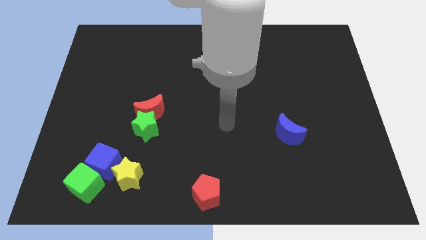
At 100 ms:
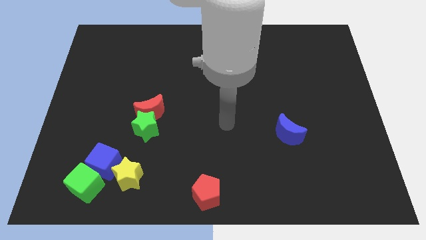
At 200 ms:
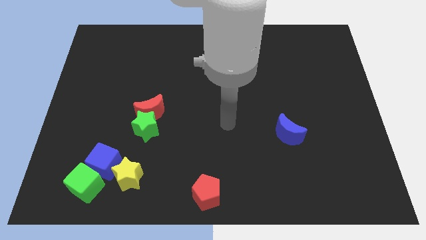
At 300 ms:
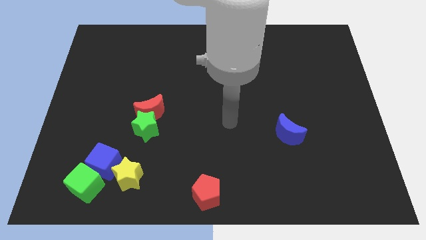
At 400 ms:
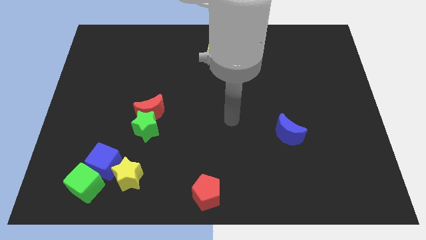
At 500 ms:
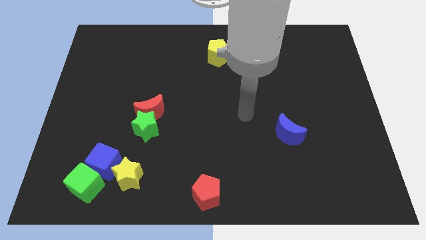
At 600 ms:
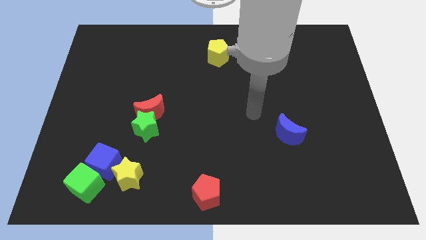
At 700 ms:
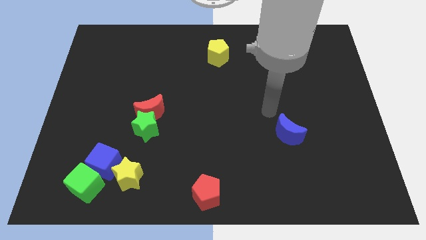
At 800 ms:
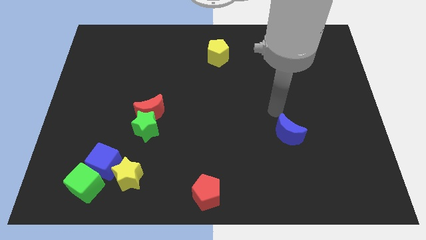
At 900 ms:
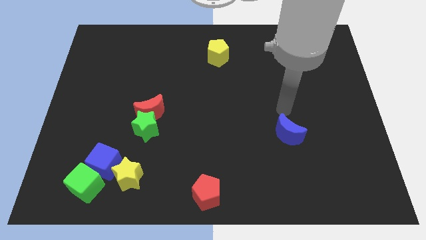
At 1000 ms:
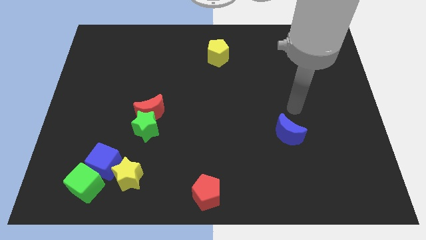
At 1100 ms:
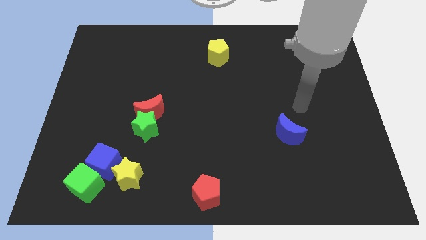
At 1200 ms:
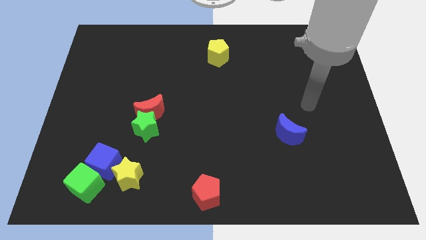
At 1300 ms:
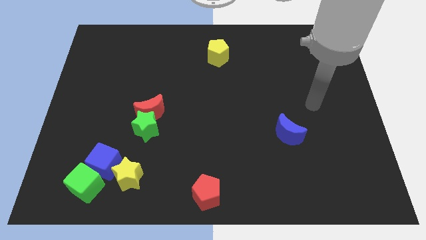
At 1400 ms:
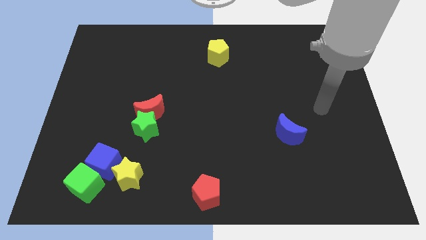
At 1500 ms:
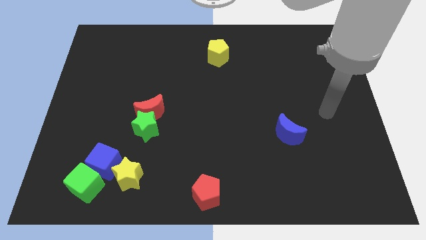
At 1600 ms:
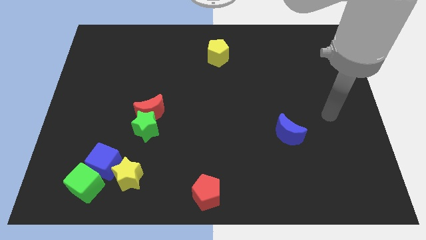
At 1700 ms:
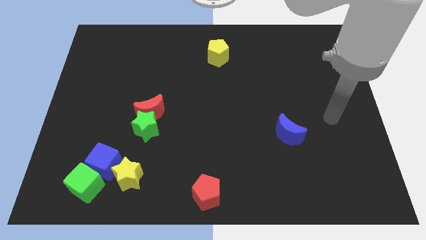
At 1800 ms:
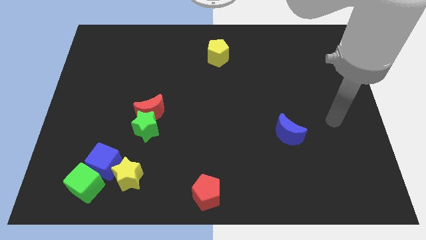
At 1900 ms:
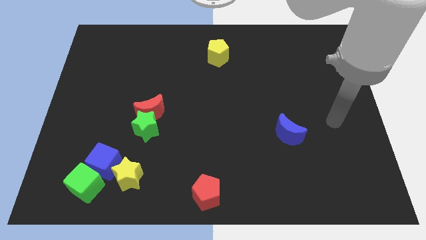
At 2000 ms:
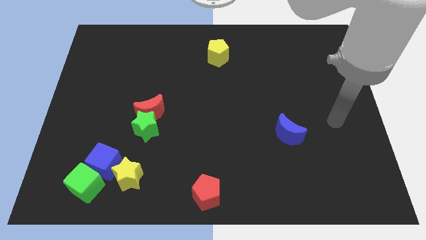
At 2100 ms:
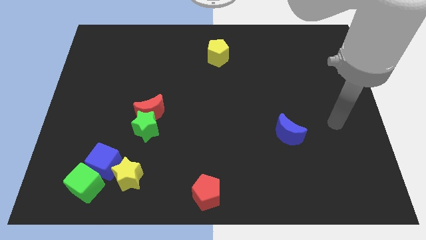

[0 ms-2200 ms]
point your hand right to the blue moon

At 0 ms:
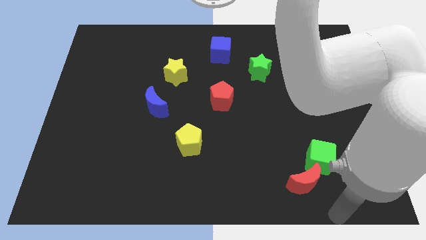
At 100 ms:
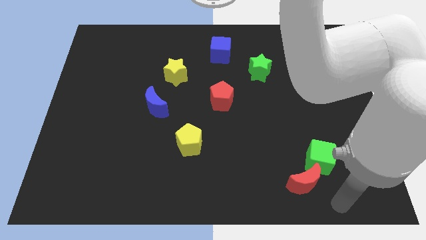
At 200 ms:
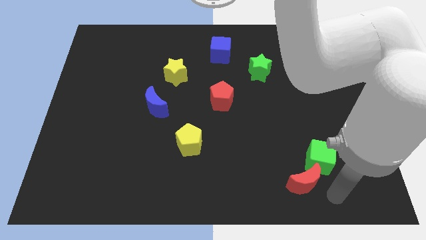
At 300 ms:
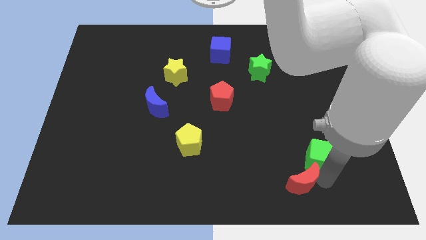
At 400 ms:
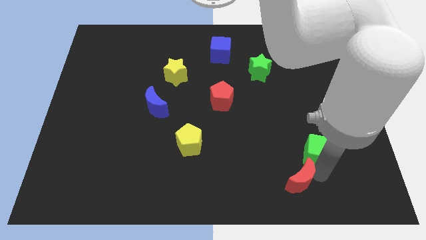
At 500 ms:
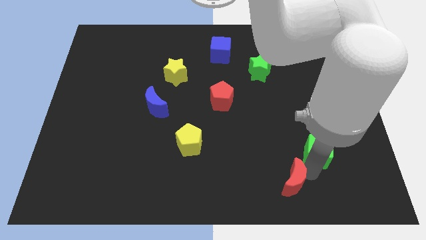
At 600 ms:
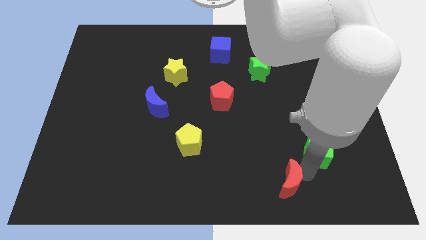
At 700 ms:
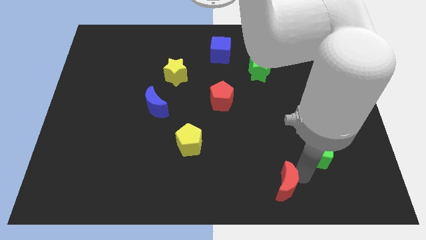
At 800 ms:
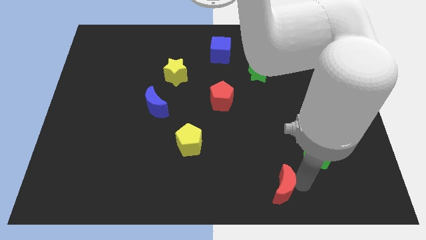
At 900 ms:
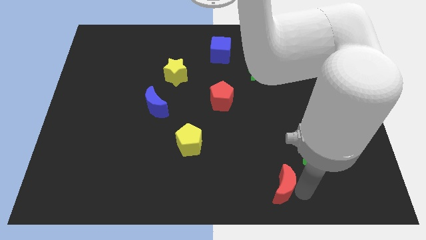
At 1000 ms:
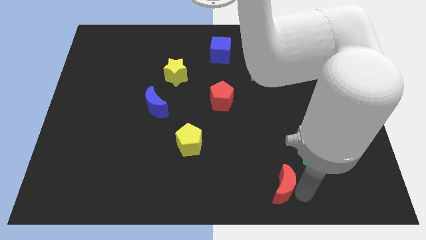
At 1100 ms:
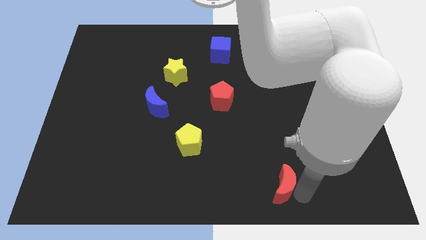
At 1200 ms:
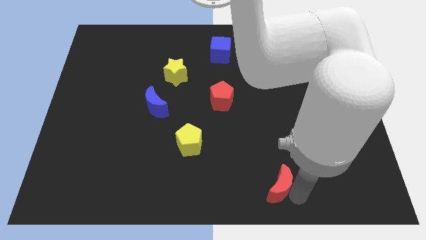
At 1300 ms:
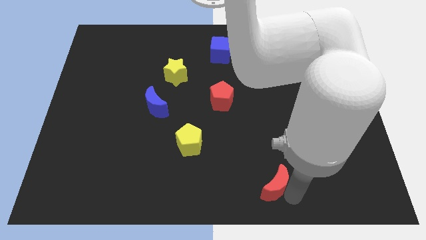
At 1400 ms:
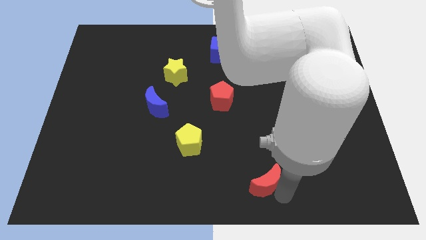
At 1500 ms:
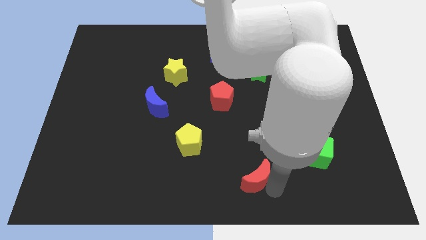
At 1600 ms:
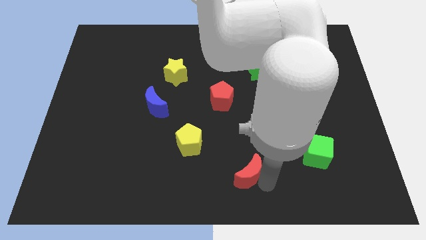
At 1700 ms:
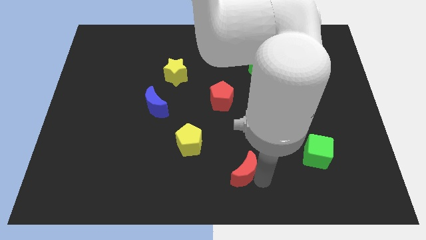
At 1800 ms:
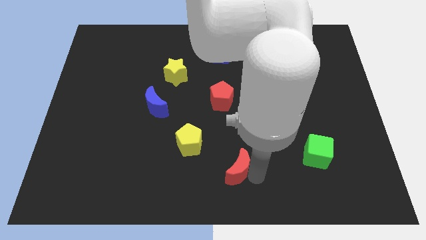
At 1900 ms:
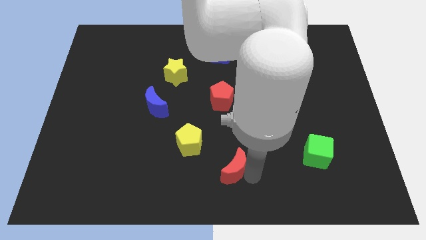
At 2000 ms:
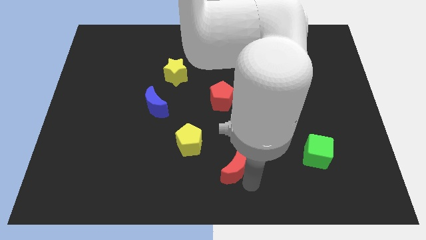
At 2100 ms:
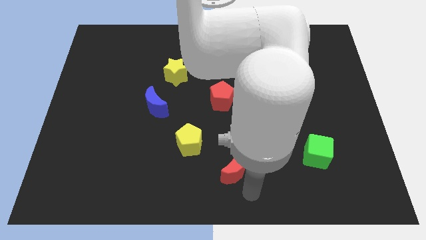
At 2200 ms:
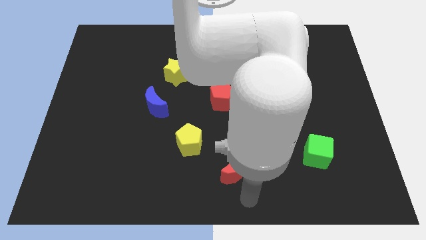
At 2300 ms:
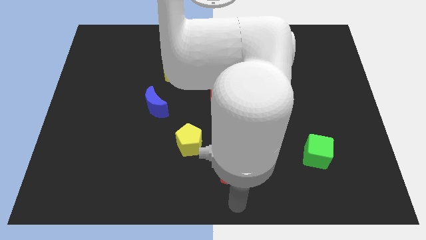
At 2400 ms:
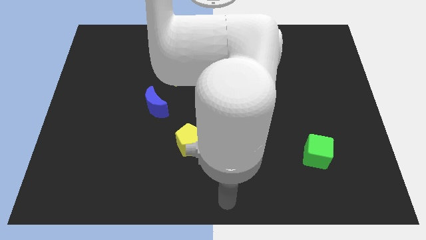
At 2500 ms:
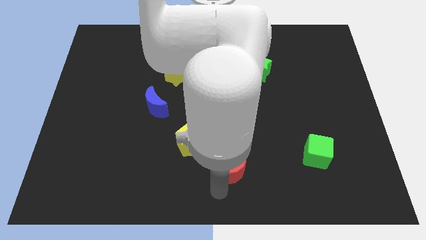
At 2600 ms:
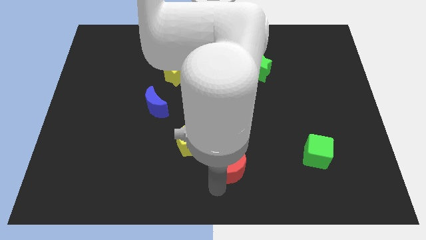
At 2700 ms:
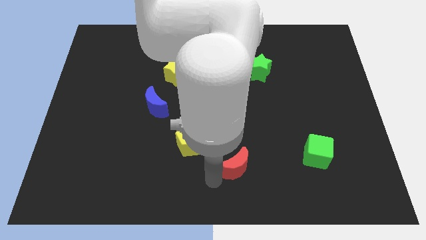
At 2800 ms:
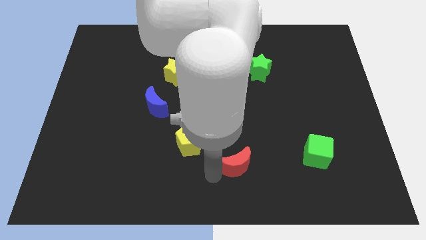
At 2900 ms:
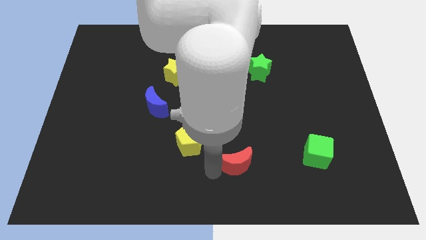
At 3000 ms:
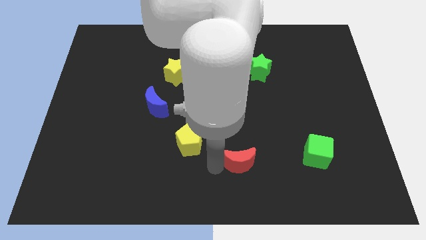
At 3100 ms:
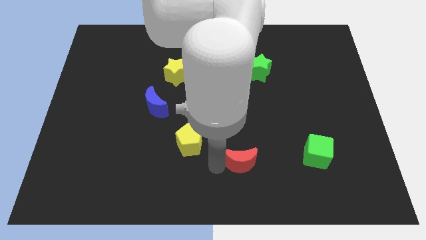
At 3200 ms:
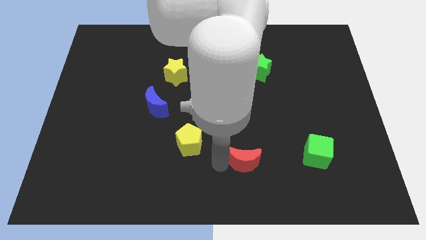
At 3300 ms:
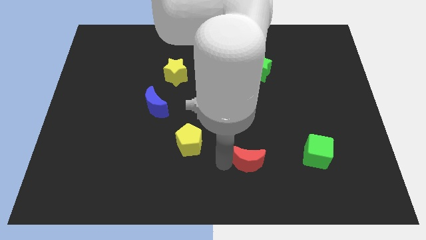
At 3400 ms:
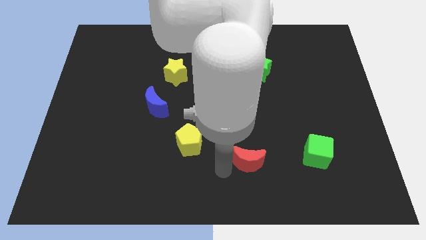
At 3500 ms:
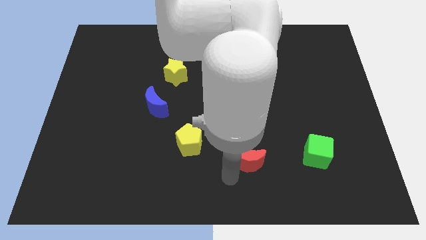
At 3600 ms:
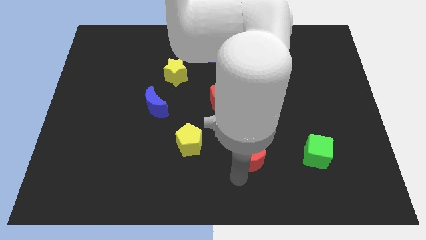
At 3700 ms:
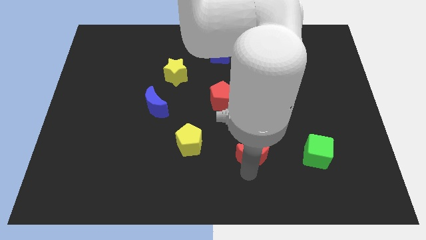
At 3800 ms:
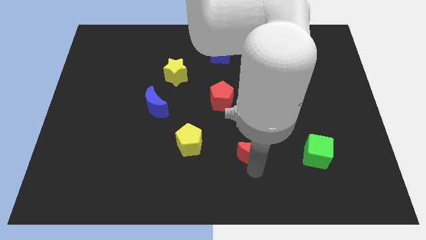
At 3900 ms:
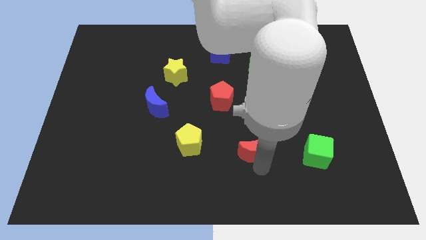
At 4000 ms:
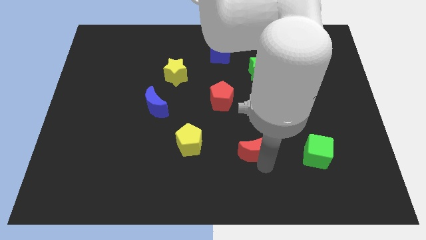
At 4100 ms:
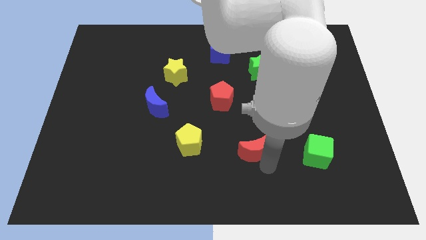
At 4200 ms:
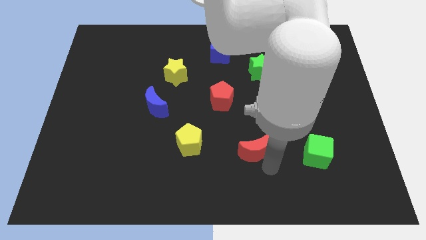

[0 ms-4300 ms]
place the red crescent below the green star

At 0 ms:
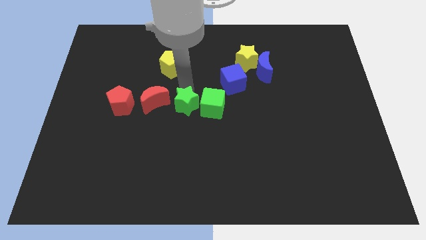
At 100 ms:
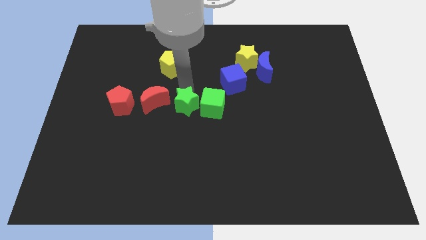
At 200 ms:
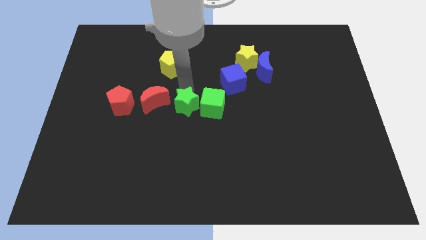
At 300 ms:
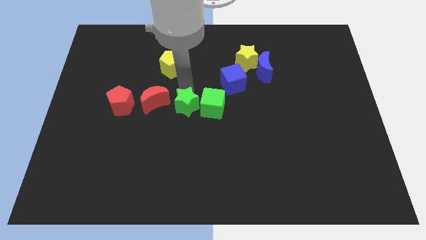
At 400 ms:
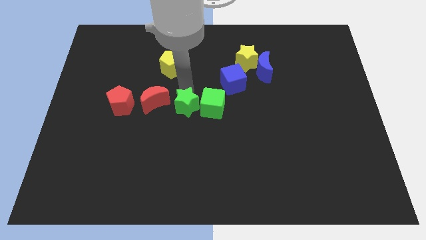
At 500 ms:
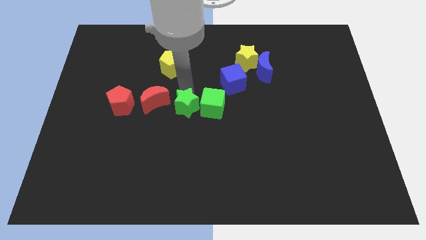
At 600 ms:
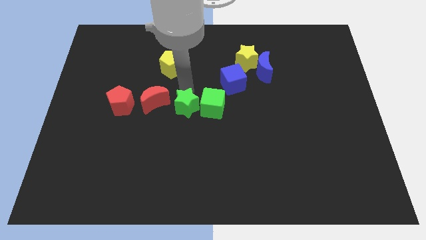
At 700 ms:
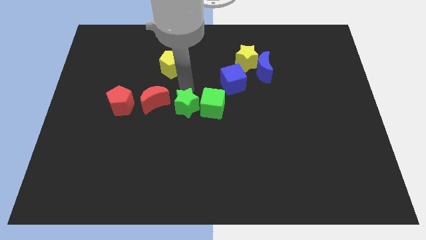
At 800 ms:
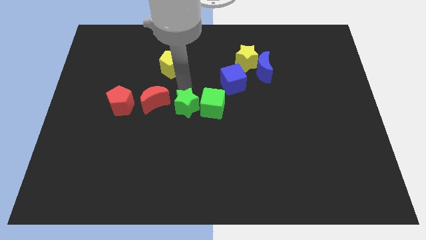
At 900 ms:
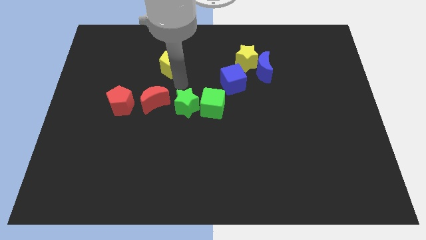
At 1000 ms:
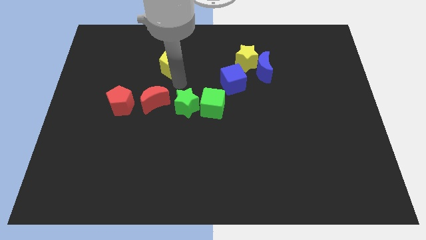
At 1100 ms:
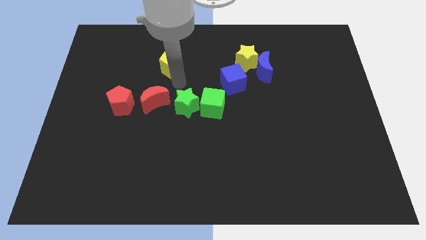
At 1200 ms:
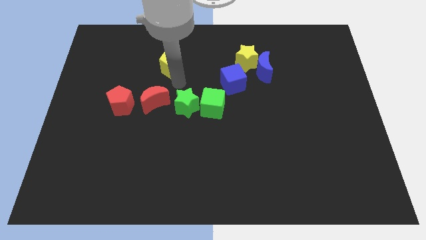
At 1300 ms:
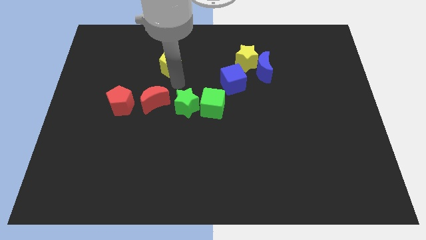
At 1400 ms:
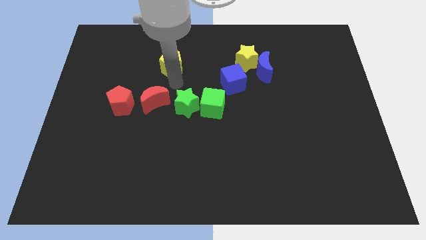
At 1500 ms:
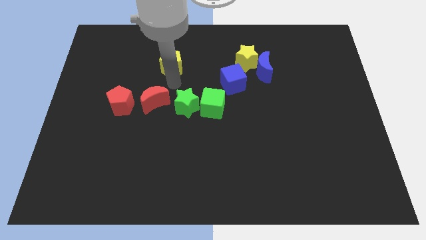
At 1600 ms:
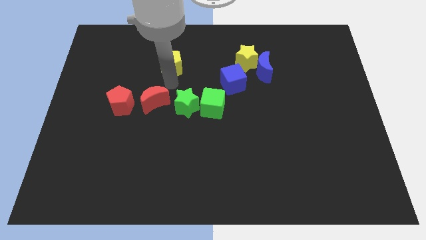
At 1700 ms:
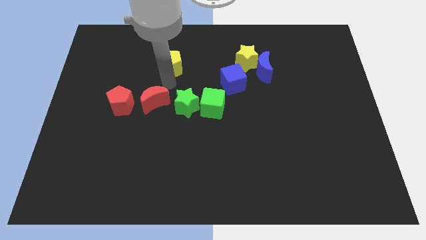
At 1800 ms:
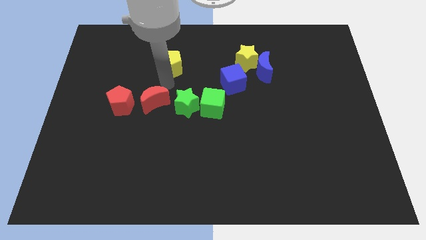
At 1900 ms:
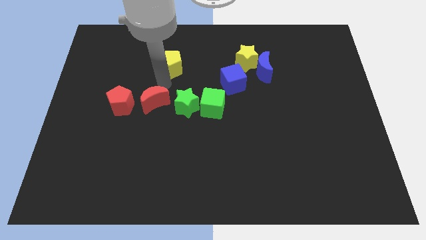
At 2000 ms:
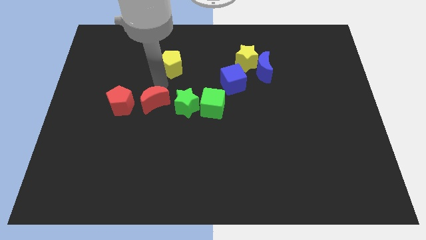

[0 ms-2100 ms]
move the arm above the red moon

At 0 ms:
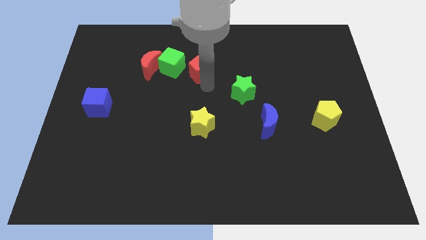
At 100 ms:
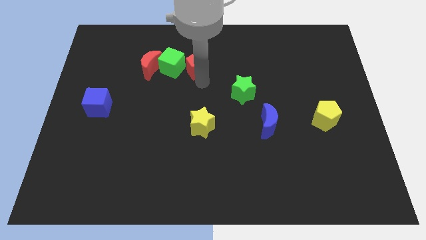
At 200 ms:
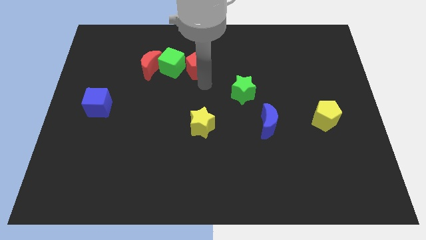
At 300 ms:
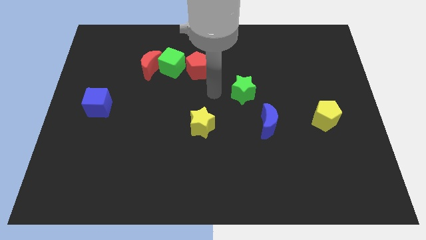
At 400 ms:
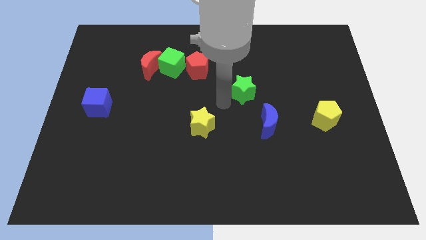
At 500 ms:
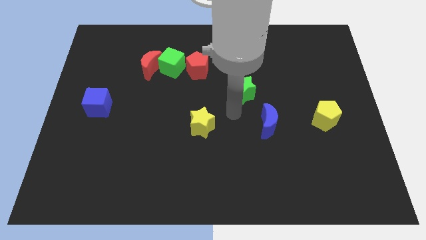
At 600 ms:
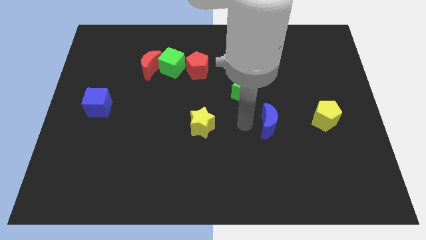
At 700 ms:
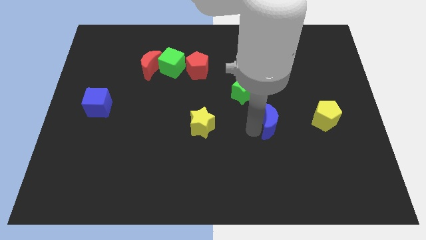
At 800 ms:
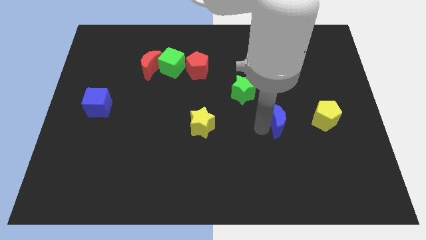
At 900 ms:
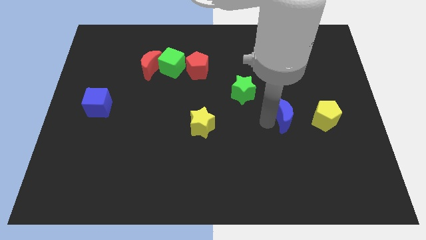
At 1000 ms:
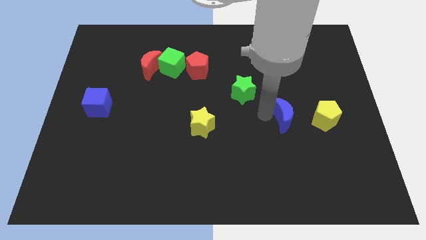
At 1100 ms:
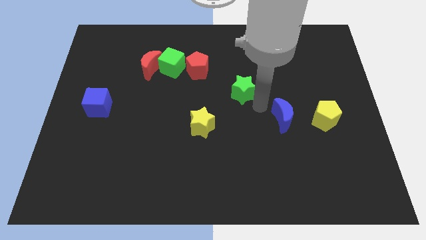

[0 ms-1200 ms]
push the blue crescent slightly to the right
